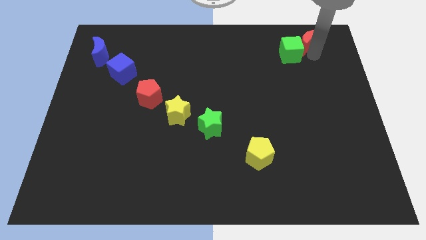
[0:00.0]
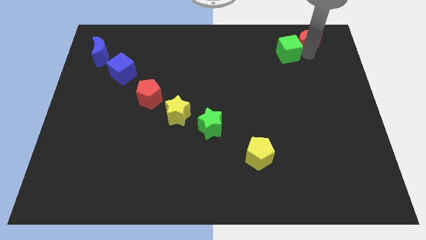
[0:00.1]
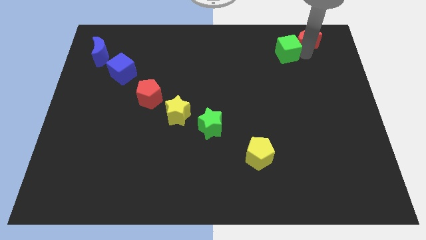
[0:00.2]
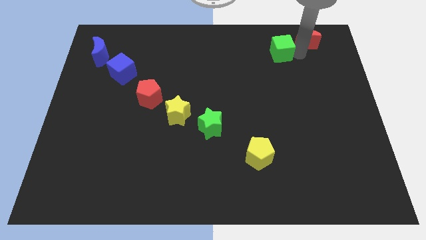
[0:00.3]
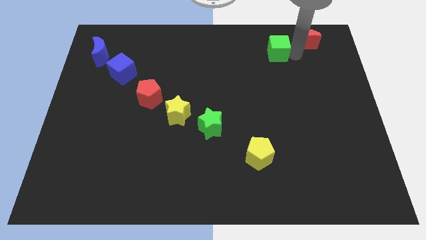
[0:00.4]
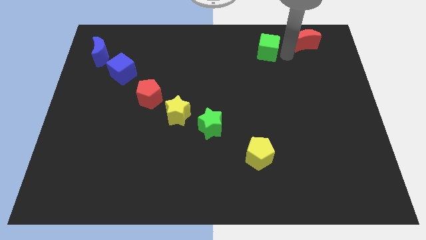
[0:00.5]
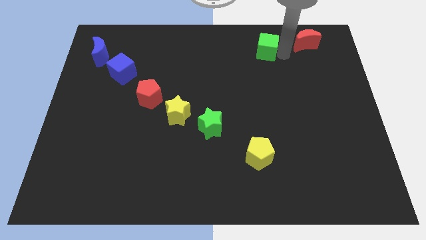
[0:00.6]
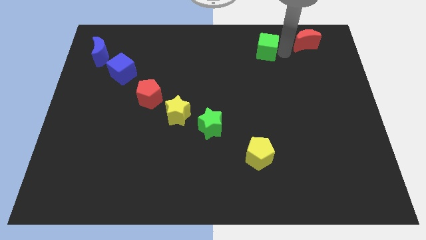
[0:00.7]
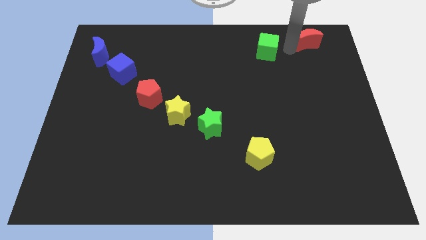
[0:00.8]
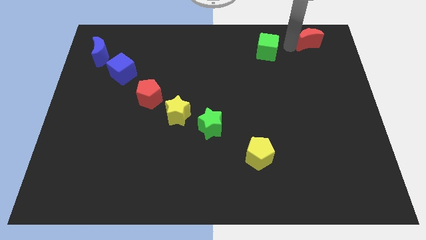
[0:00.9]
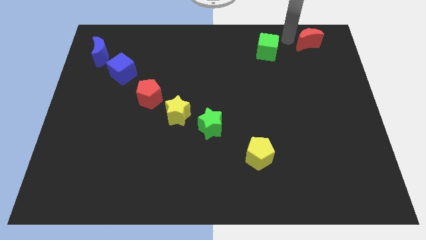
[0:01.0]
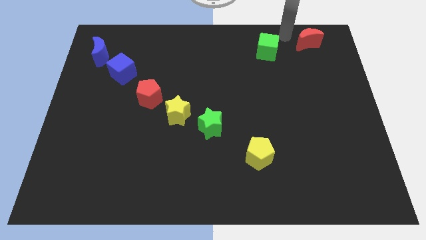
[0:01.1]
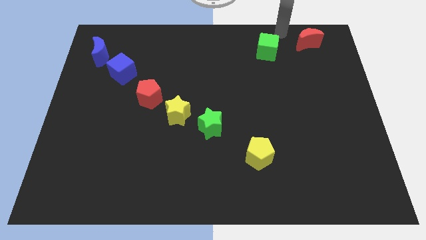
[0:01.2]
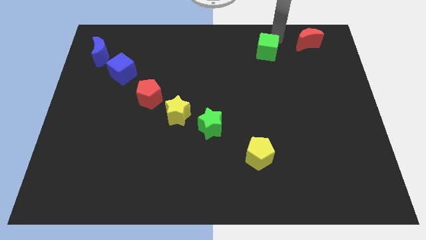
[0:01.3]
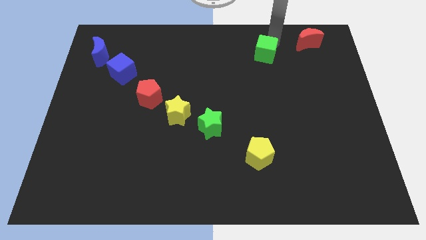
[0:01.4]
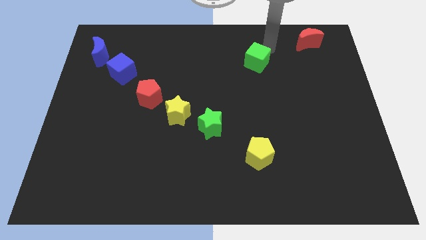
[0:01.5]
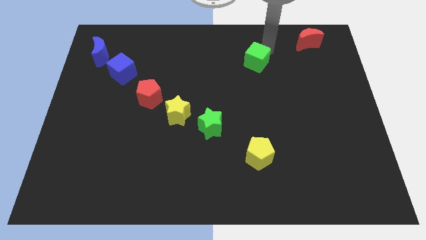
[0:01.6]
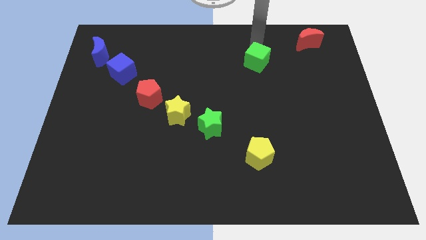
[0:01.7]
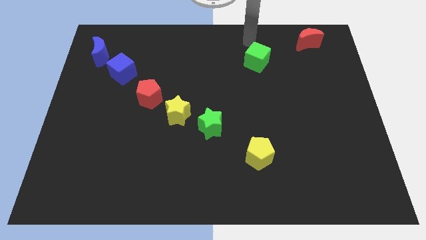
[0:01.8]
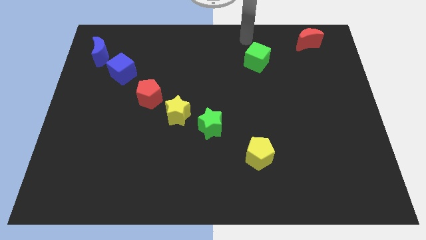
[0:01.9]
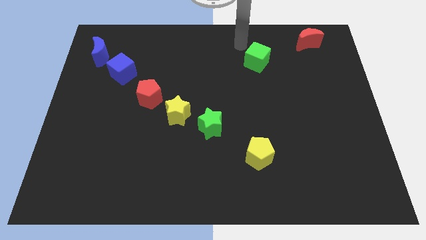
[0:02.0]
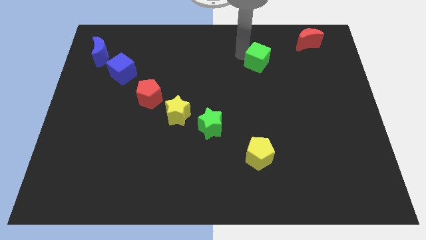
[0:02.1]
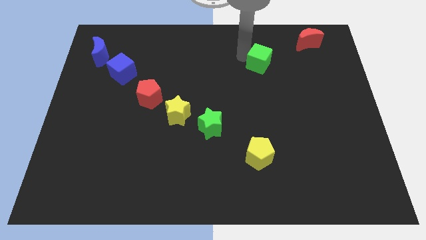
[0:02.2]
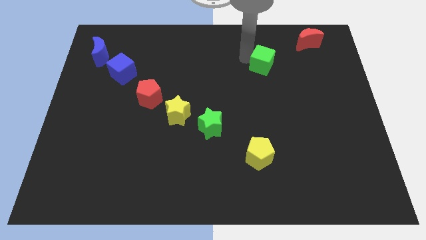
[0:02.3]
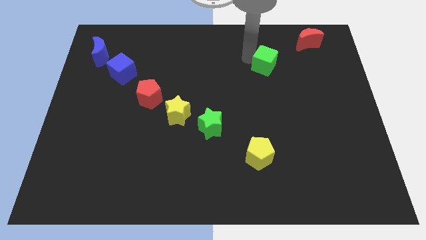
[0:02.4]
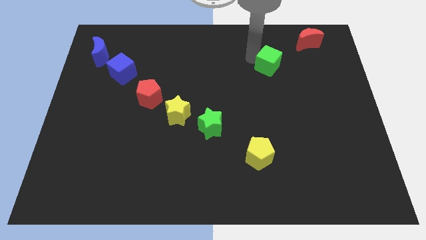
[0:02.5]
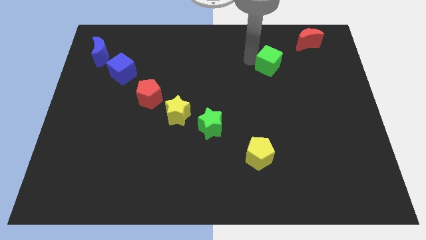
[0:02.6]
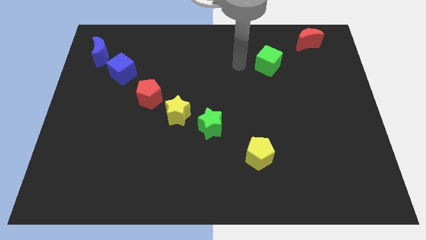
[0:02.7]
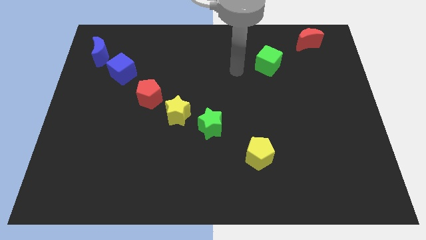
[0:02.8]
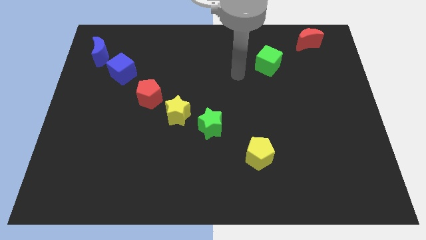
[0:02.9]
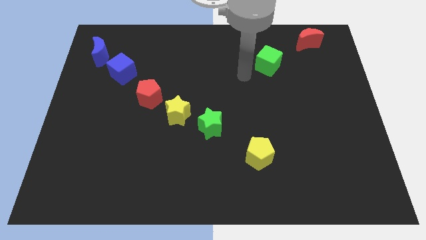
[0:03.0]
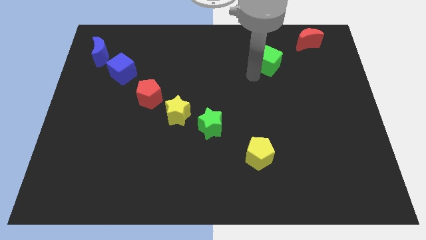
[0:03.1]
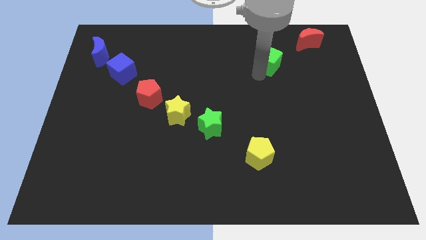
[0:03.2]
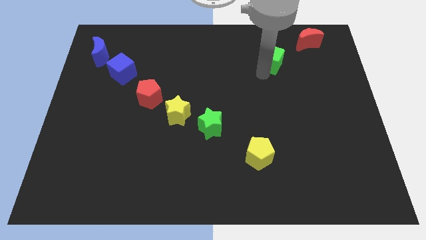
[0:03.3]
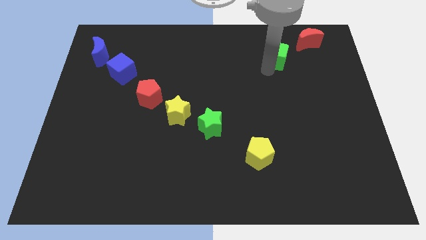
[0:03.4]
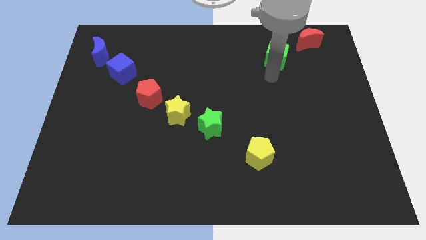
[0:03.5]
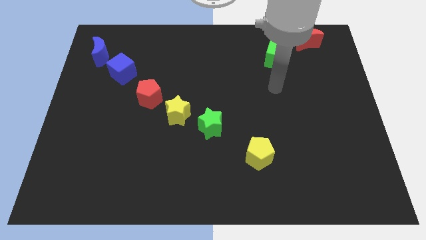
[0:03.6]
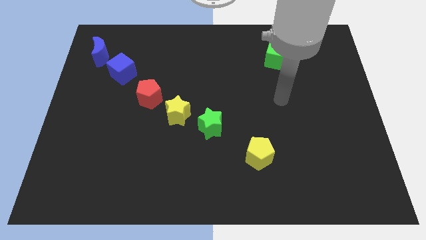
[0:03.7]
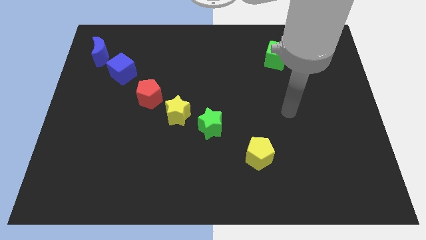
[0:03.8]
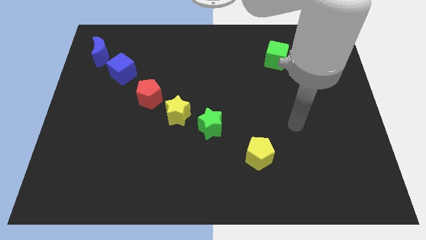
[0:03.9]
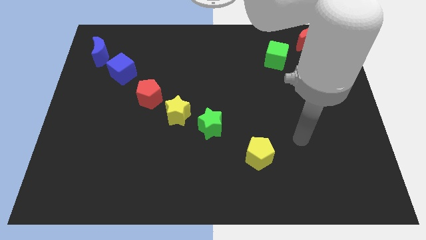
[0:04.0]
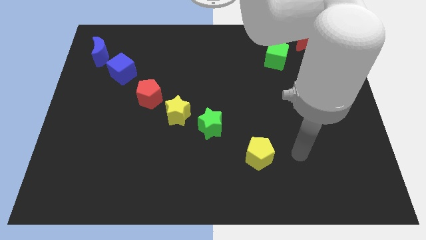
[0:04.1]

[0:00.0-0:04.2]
slightly move the green cube towards the red crescent

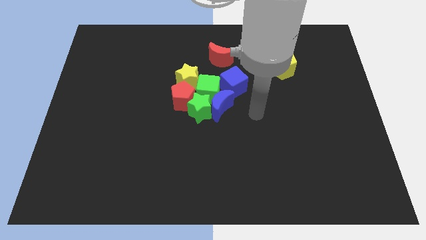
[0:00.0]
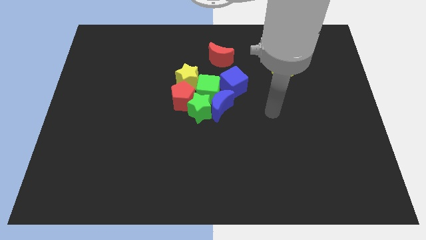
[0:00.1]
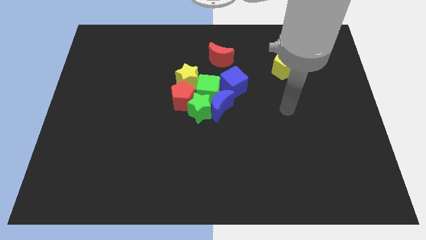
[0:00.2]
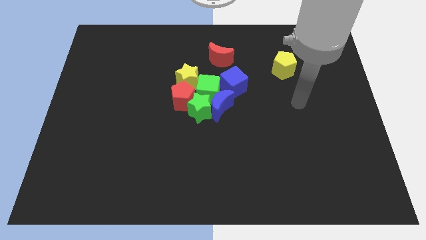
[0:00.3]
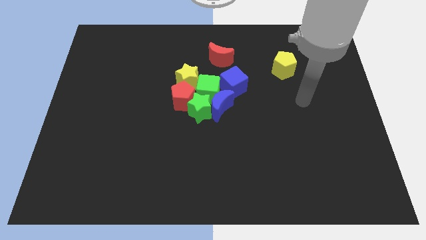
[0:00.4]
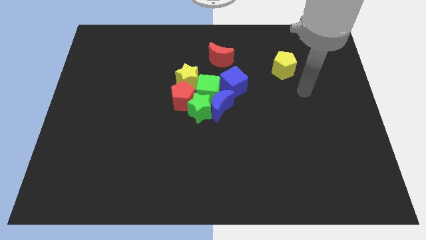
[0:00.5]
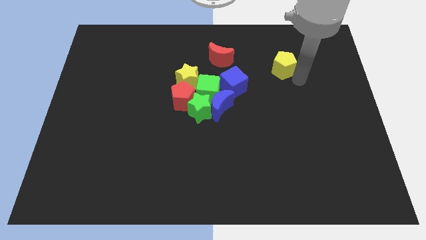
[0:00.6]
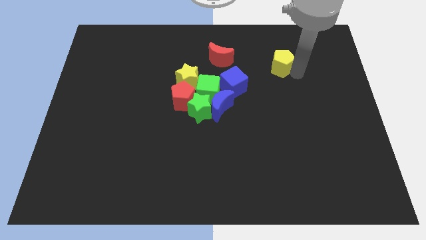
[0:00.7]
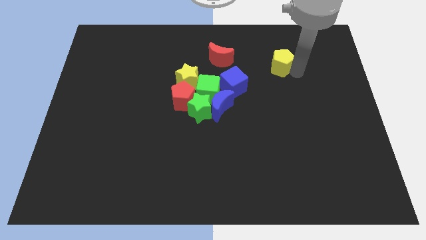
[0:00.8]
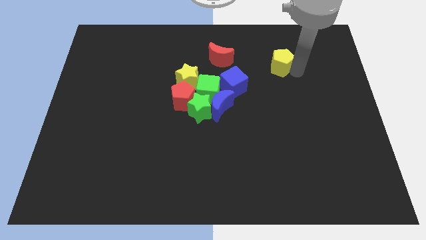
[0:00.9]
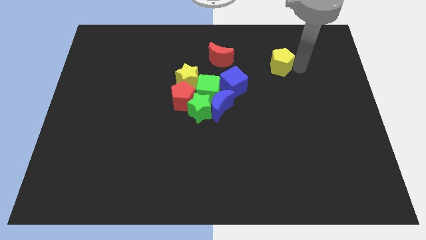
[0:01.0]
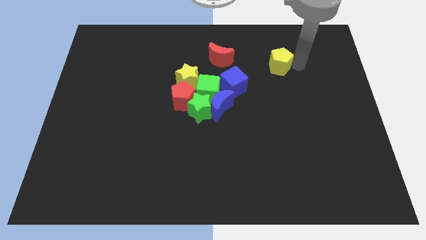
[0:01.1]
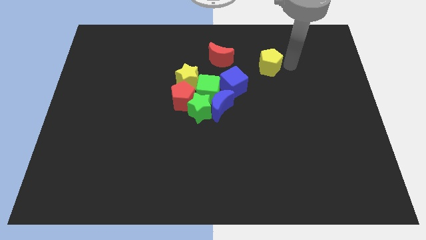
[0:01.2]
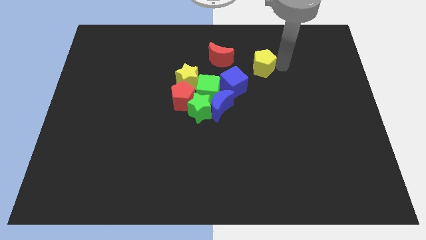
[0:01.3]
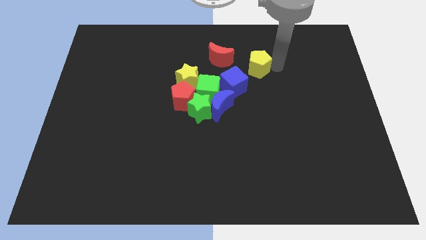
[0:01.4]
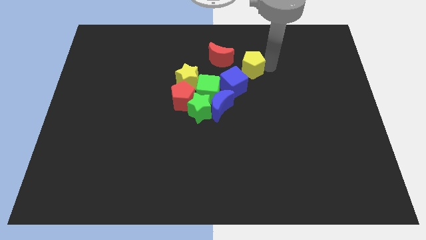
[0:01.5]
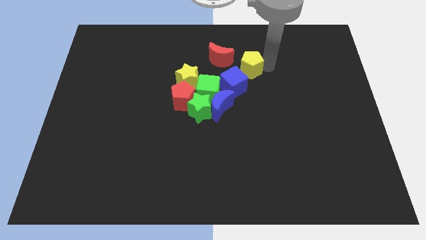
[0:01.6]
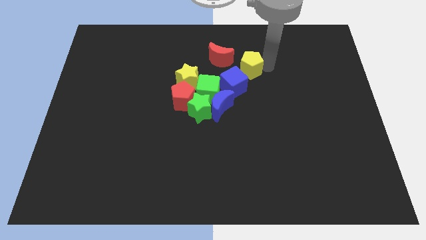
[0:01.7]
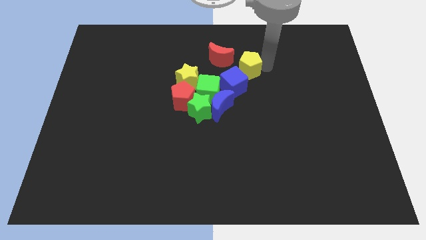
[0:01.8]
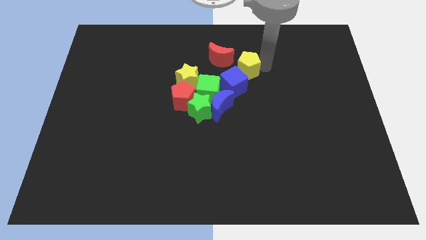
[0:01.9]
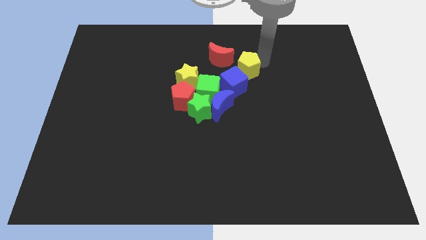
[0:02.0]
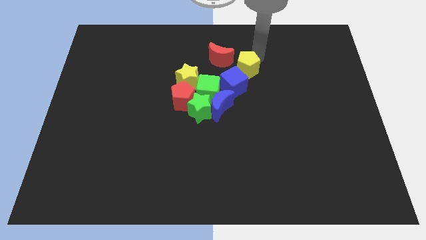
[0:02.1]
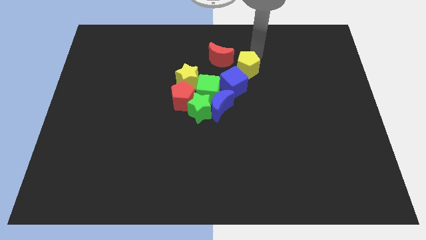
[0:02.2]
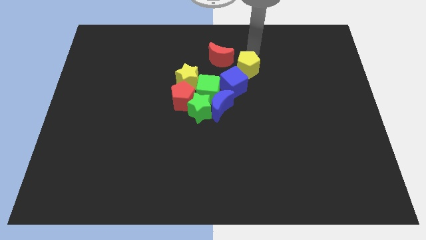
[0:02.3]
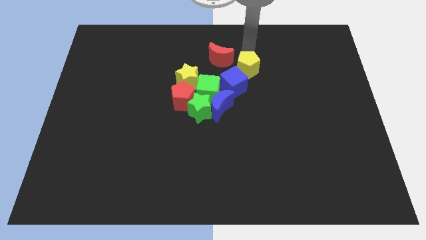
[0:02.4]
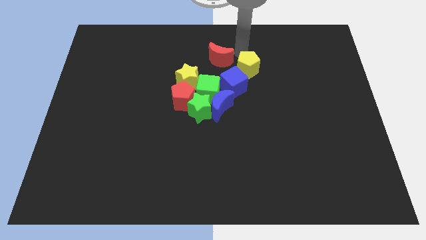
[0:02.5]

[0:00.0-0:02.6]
move the yellow star to the top right of the blue cube

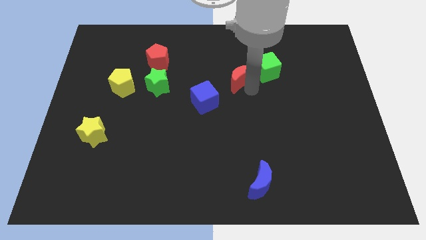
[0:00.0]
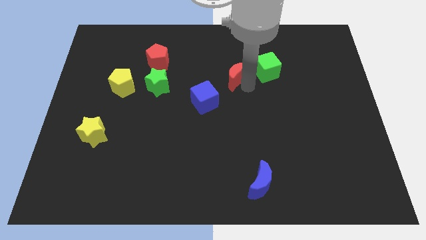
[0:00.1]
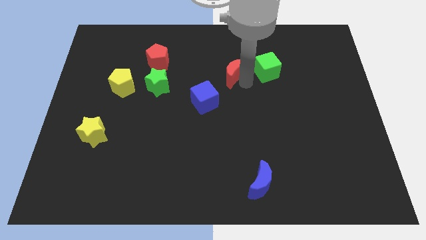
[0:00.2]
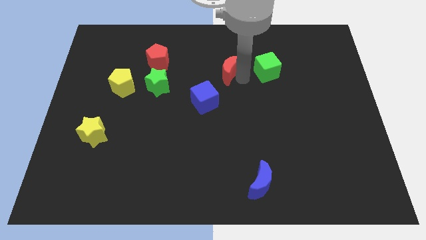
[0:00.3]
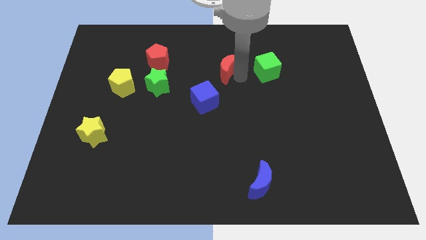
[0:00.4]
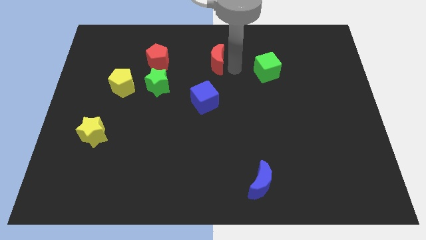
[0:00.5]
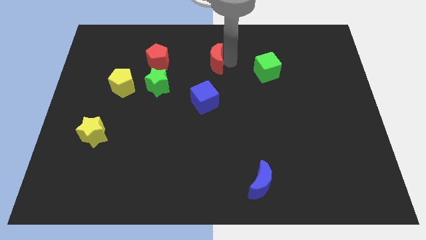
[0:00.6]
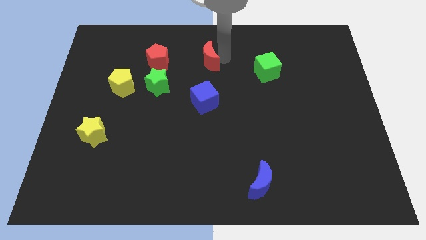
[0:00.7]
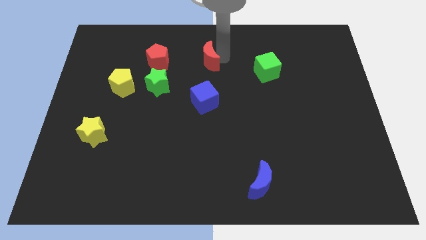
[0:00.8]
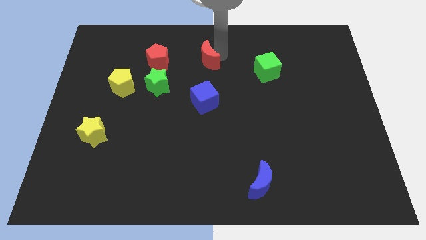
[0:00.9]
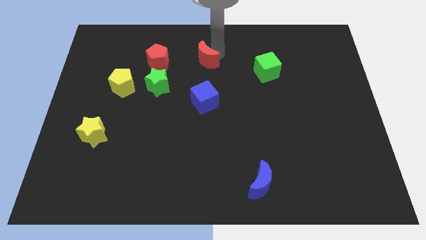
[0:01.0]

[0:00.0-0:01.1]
place red moon parallel to red pentagon

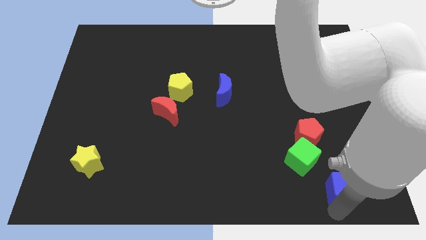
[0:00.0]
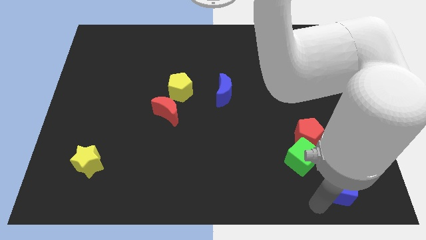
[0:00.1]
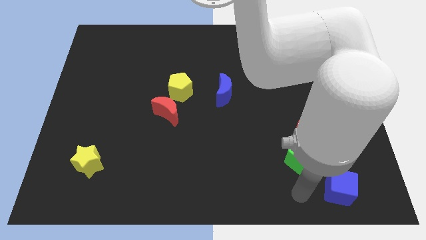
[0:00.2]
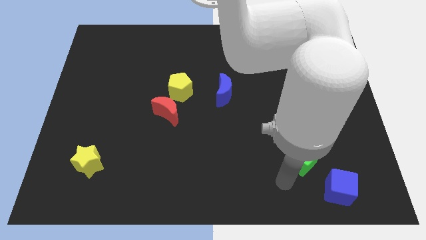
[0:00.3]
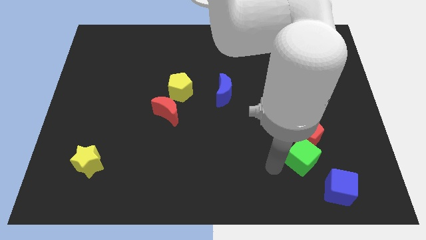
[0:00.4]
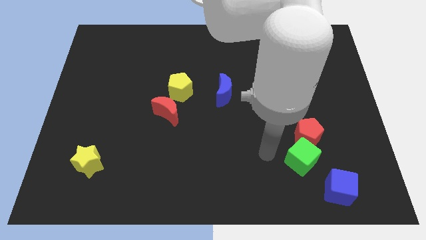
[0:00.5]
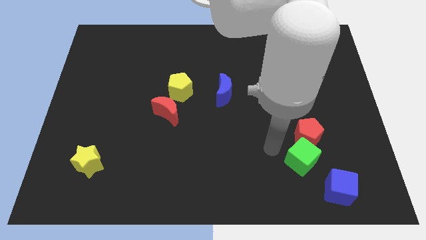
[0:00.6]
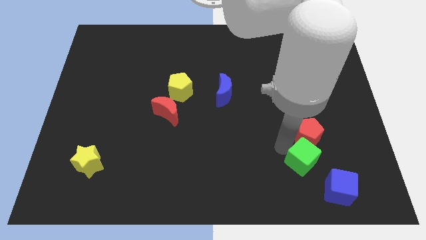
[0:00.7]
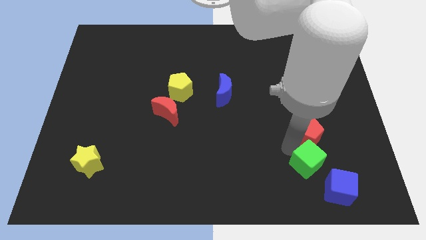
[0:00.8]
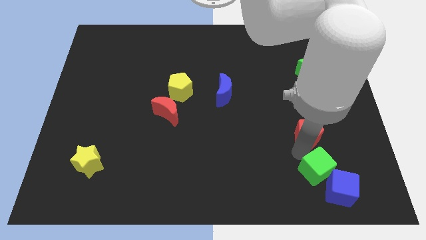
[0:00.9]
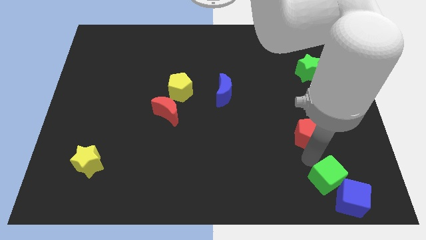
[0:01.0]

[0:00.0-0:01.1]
push the green cube into the blue cube
